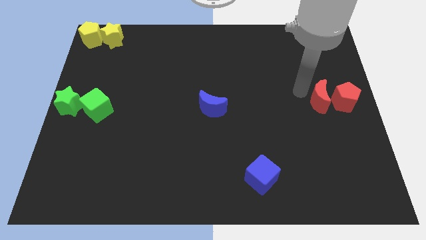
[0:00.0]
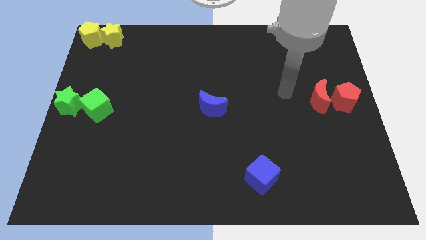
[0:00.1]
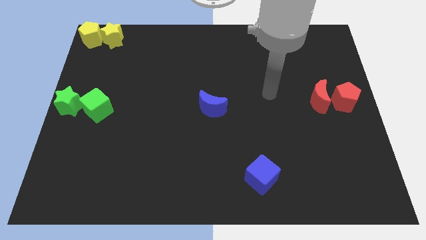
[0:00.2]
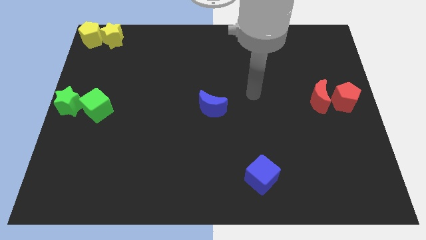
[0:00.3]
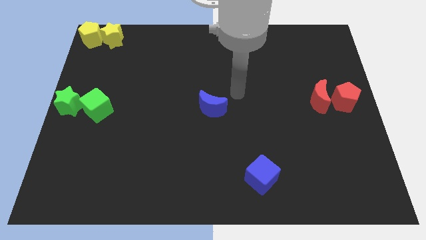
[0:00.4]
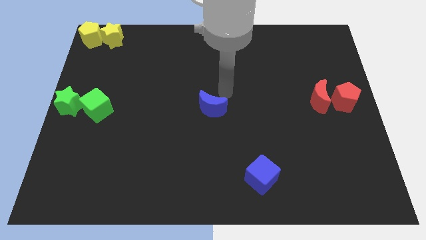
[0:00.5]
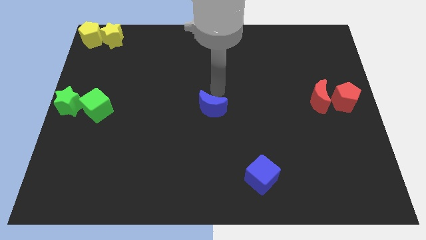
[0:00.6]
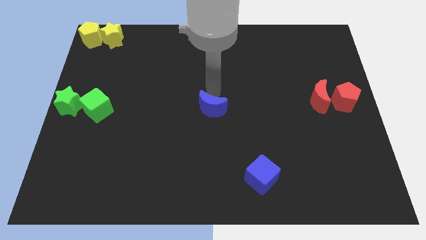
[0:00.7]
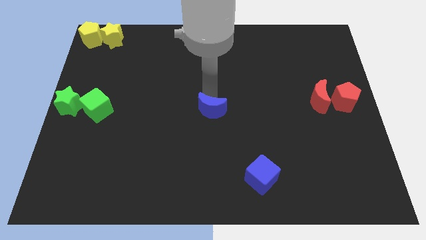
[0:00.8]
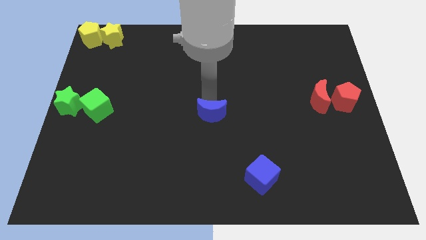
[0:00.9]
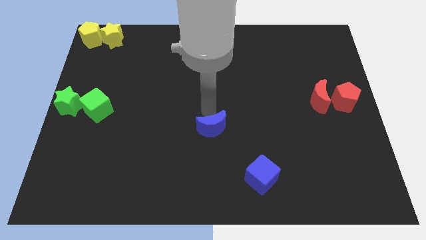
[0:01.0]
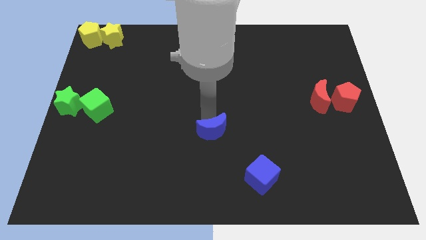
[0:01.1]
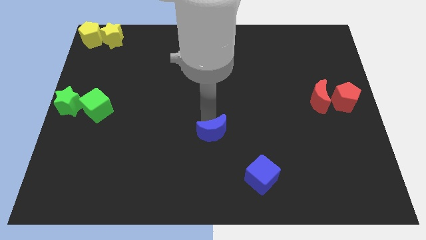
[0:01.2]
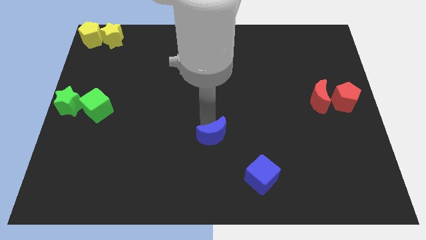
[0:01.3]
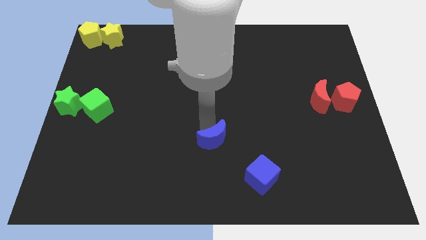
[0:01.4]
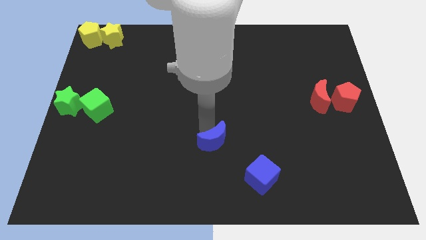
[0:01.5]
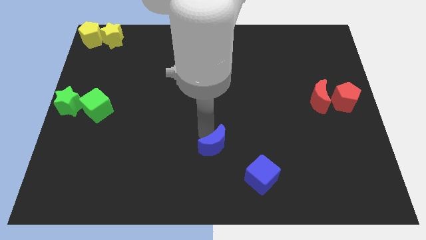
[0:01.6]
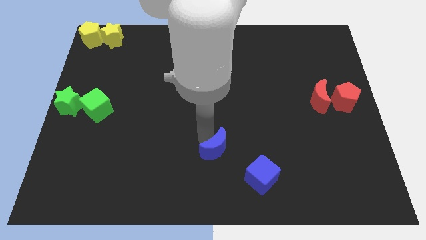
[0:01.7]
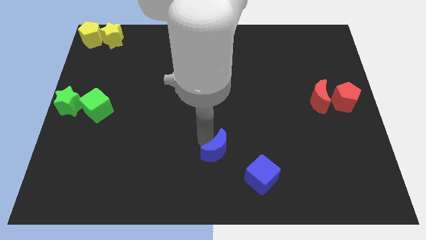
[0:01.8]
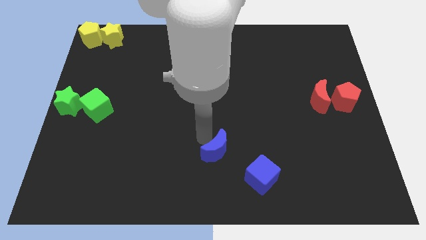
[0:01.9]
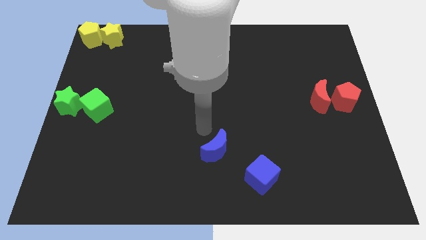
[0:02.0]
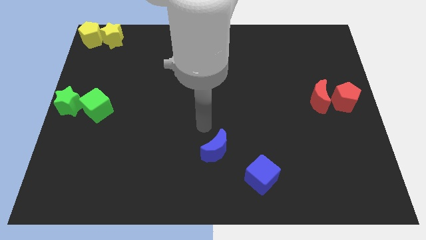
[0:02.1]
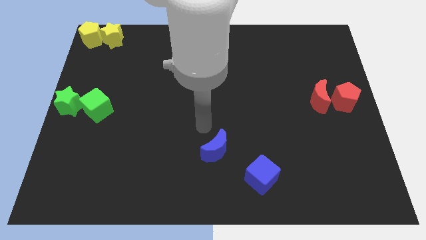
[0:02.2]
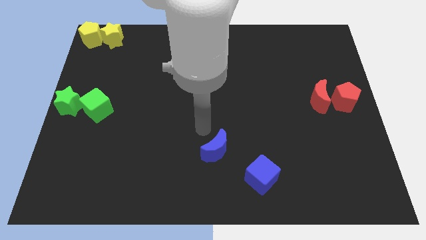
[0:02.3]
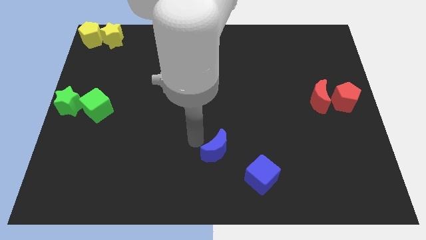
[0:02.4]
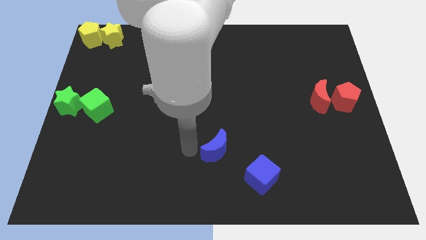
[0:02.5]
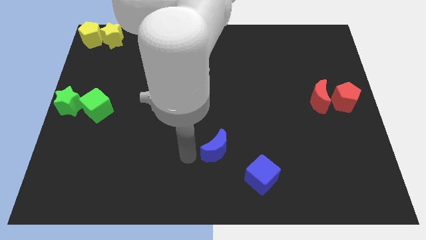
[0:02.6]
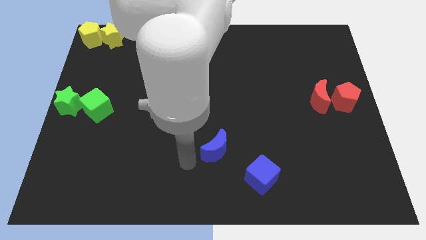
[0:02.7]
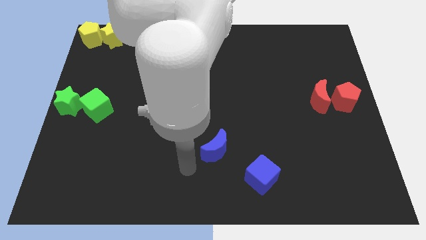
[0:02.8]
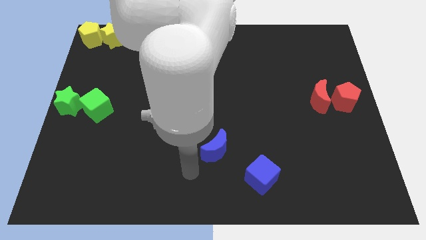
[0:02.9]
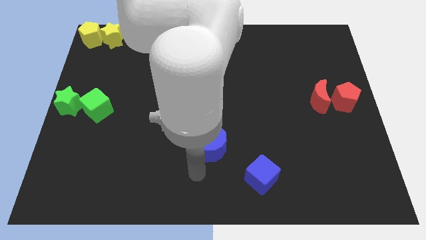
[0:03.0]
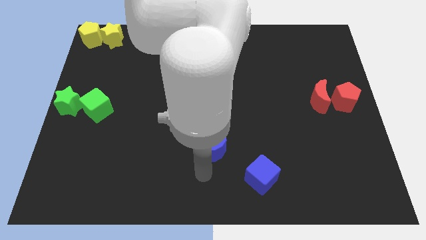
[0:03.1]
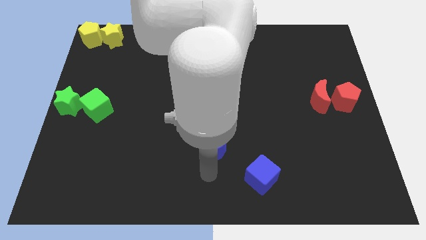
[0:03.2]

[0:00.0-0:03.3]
move the blue moon down slightly towards the bottom center

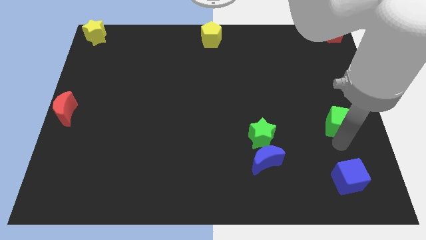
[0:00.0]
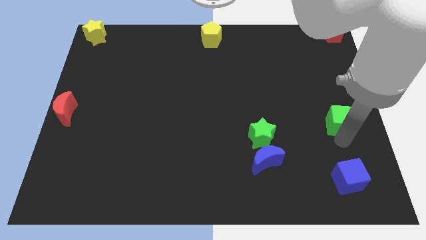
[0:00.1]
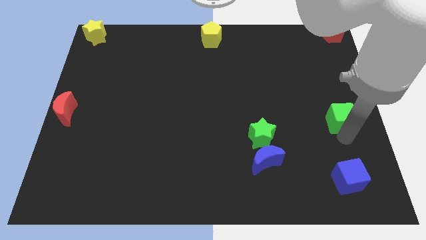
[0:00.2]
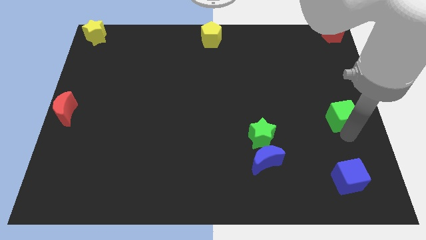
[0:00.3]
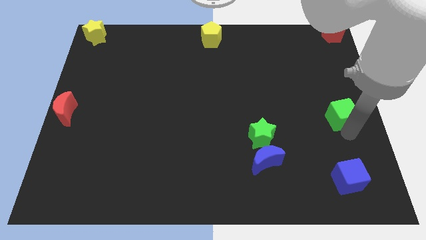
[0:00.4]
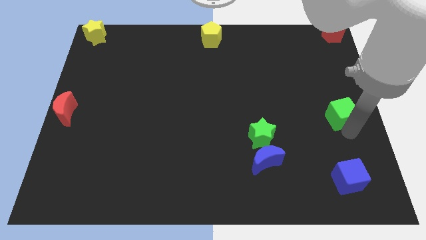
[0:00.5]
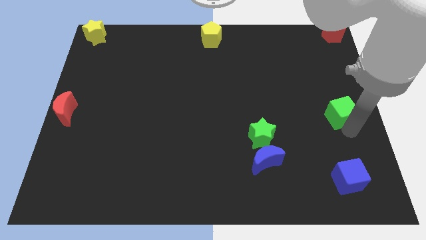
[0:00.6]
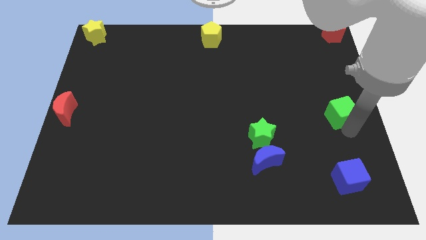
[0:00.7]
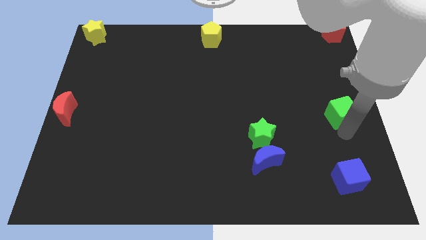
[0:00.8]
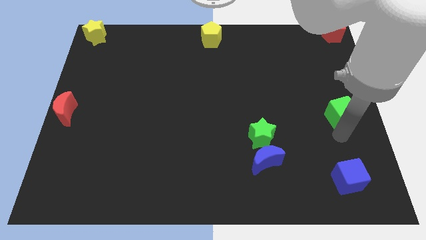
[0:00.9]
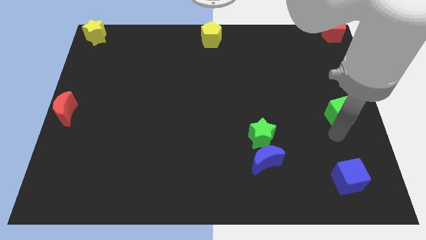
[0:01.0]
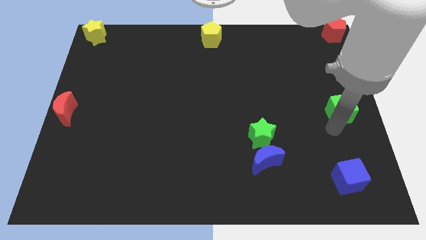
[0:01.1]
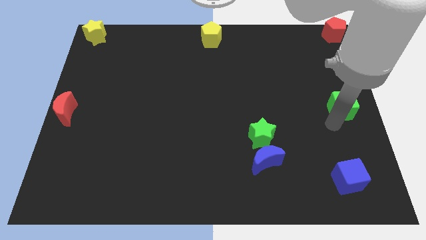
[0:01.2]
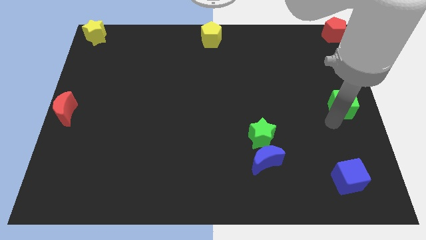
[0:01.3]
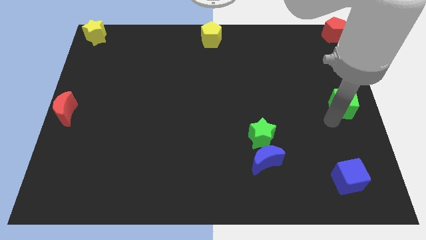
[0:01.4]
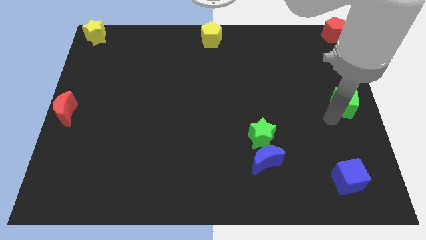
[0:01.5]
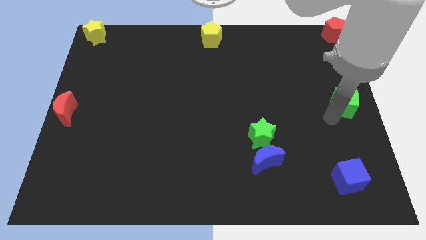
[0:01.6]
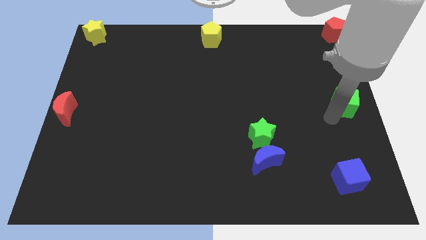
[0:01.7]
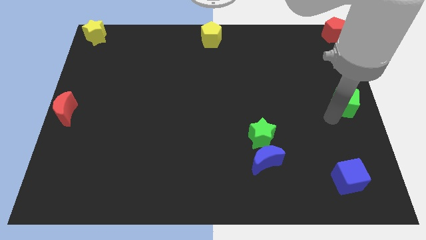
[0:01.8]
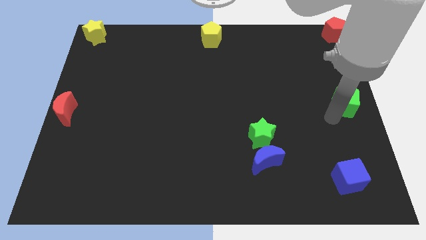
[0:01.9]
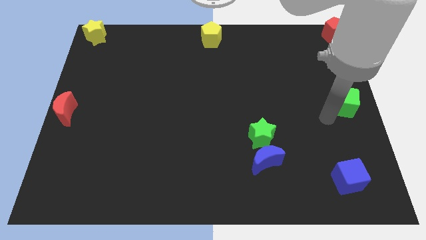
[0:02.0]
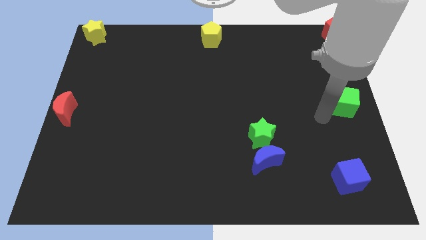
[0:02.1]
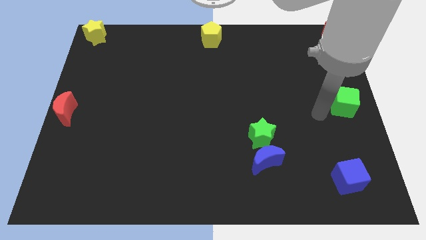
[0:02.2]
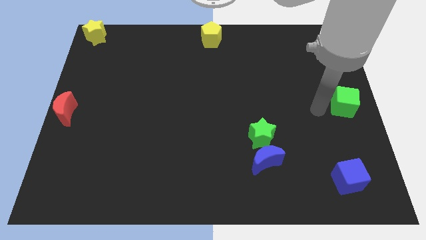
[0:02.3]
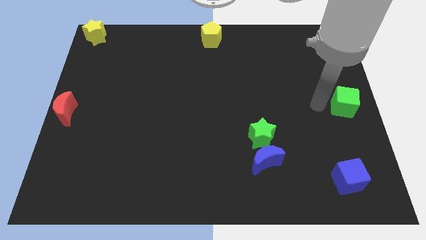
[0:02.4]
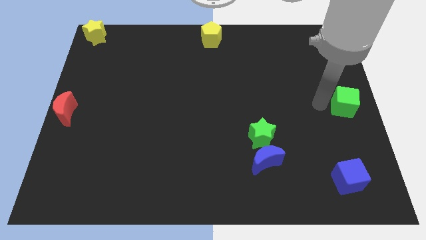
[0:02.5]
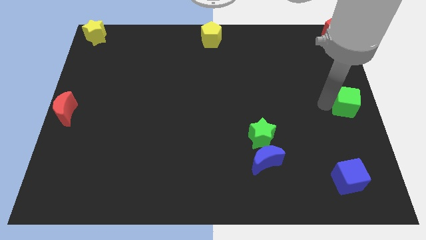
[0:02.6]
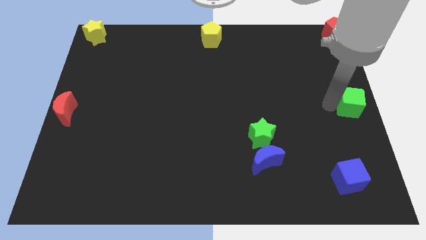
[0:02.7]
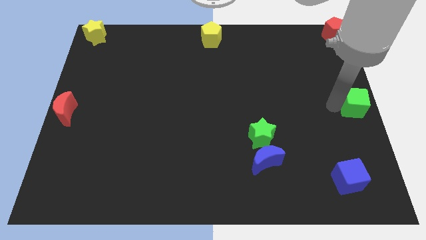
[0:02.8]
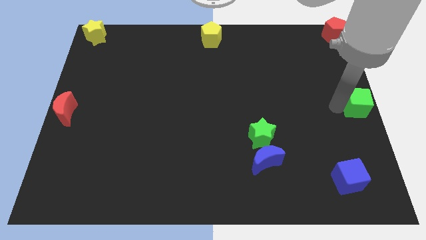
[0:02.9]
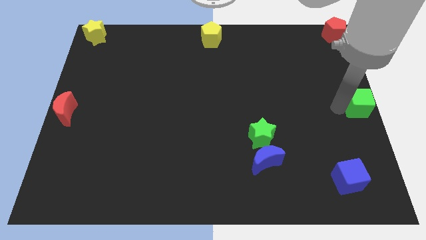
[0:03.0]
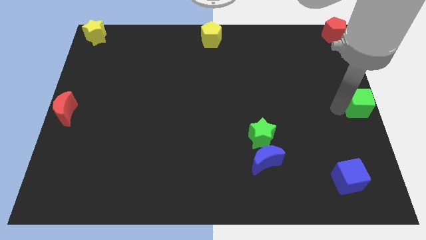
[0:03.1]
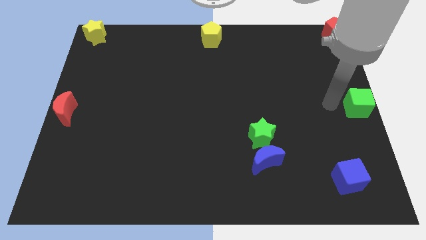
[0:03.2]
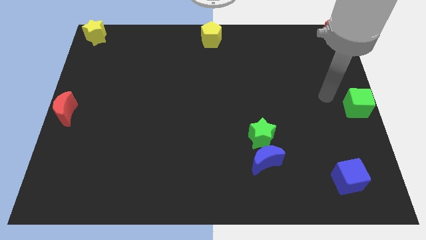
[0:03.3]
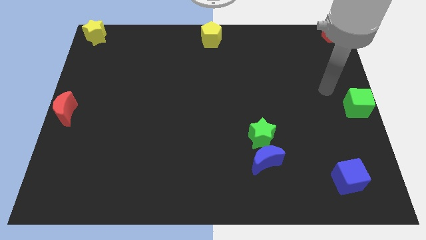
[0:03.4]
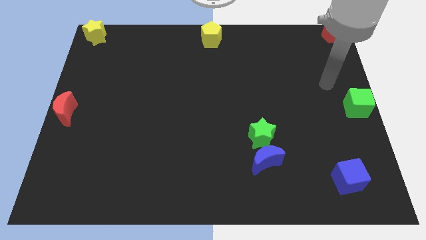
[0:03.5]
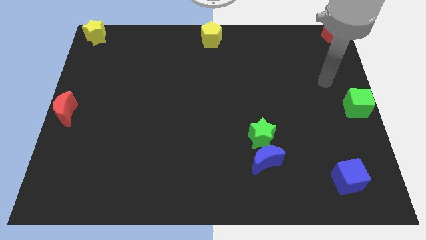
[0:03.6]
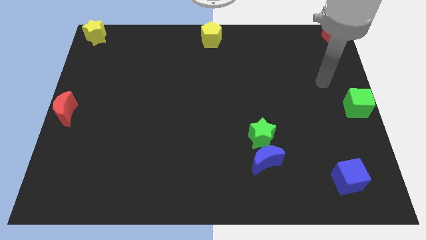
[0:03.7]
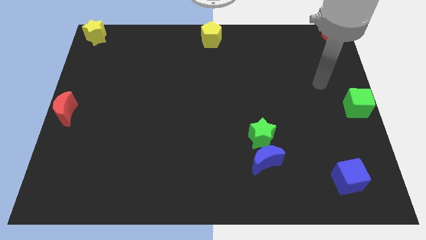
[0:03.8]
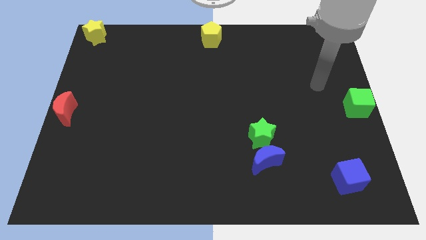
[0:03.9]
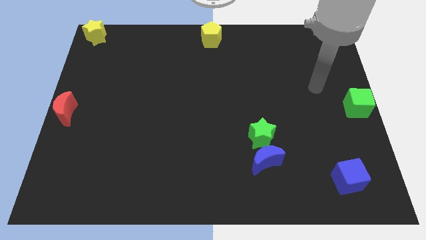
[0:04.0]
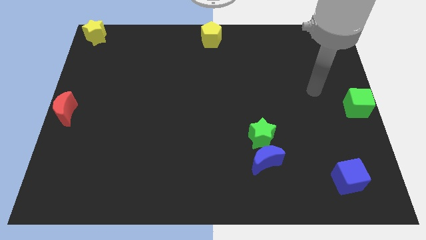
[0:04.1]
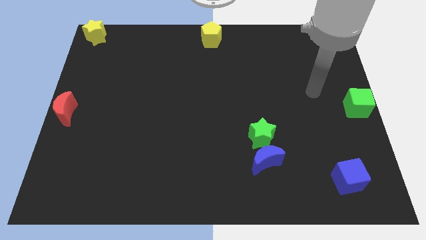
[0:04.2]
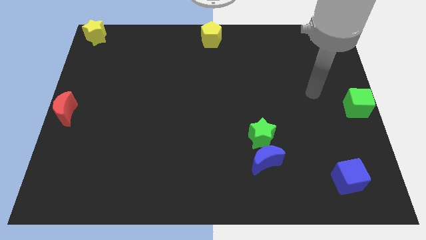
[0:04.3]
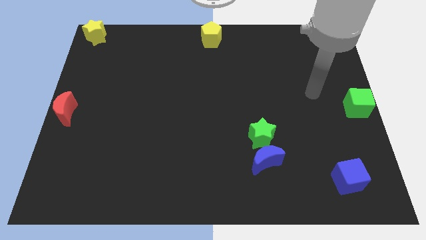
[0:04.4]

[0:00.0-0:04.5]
push the green cube to the right side of the board

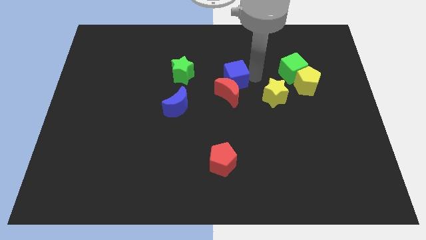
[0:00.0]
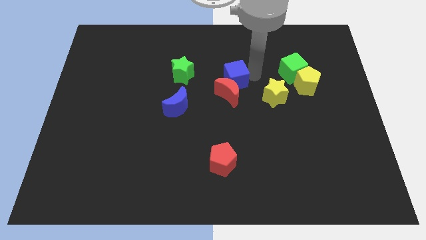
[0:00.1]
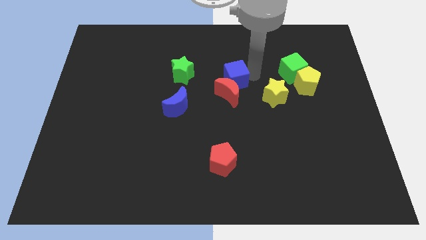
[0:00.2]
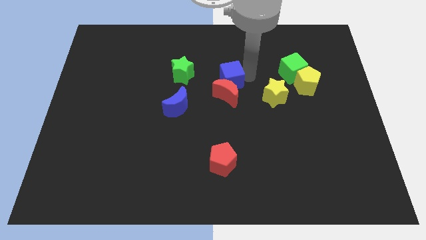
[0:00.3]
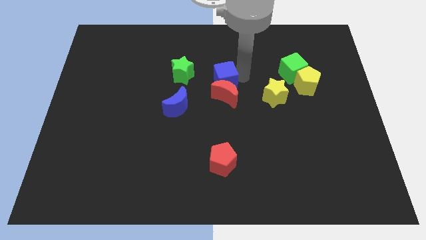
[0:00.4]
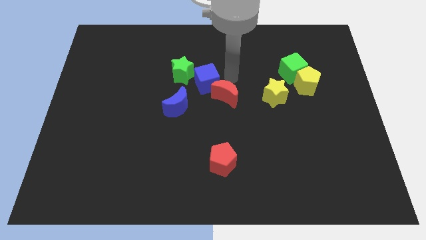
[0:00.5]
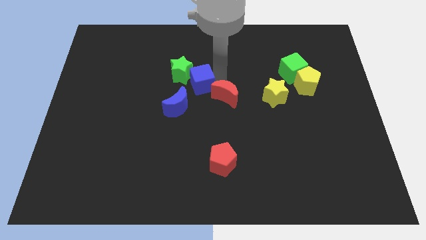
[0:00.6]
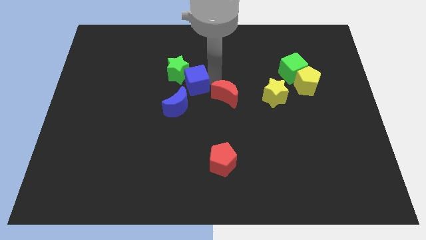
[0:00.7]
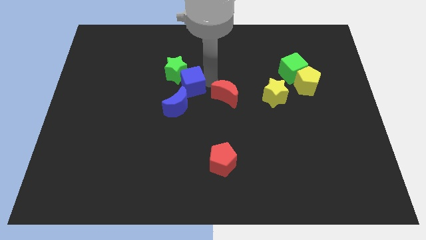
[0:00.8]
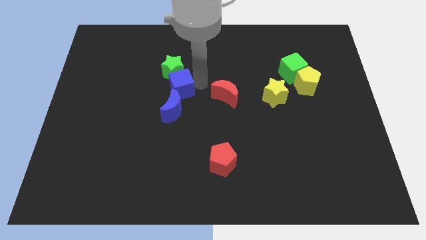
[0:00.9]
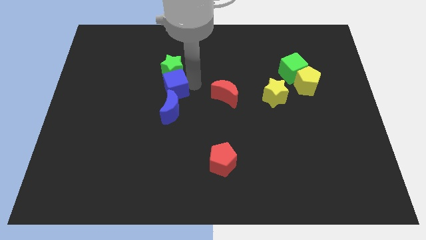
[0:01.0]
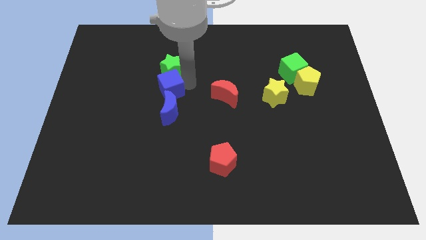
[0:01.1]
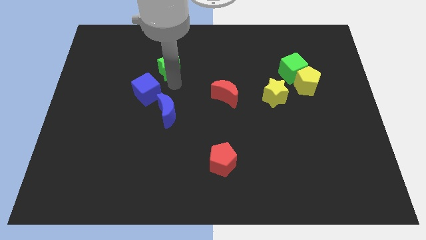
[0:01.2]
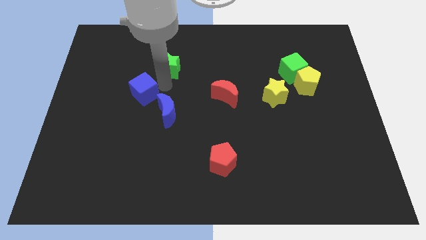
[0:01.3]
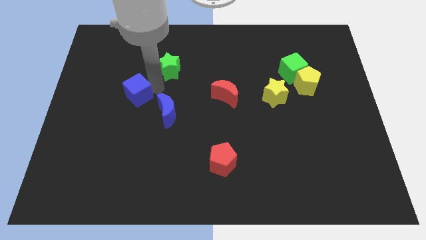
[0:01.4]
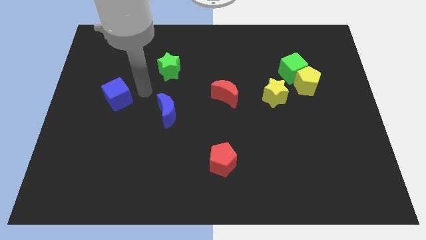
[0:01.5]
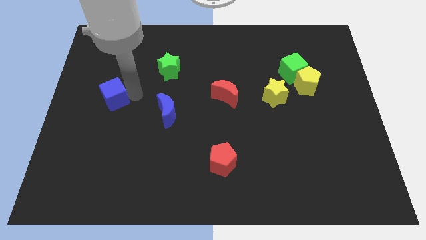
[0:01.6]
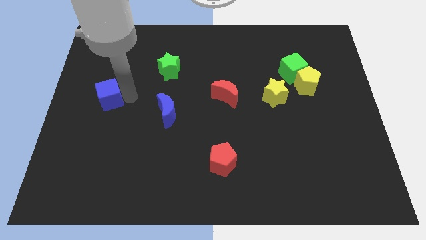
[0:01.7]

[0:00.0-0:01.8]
push the blue cube towards the left center
